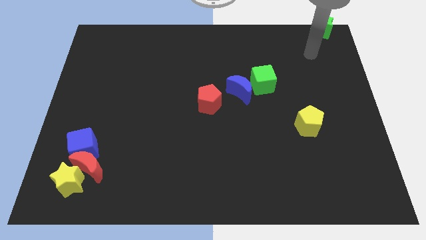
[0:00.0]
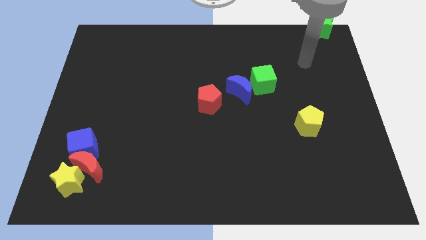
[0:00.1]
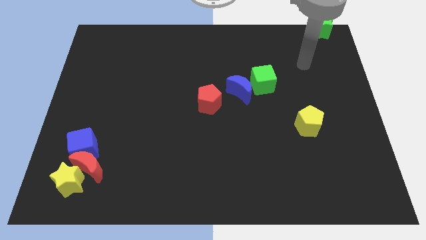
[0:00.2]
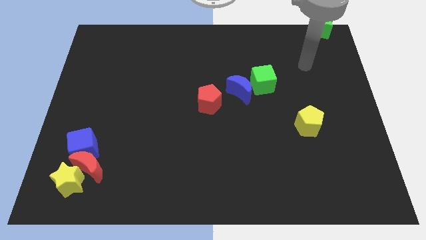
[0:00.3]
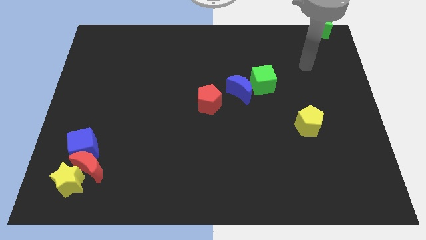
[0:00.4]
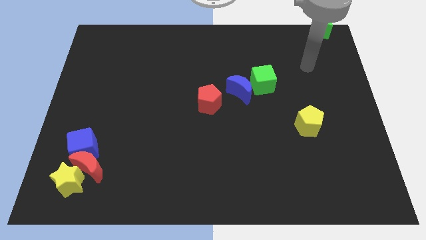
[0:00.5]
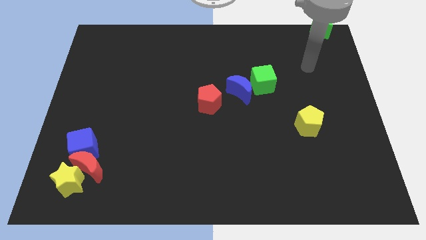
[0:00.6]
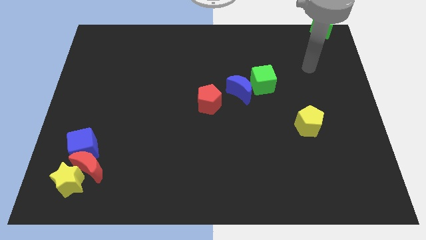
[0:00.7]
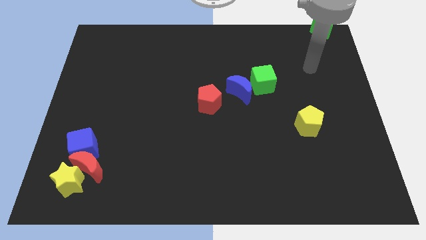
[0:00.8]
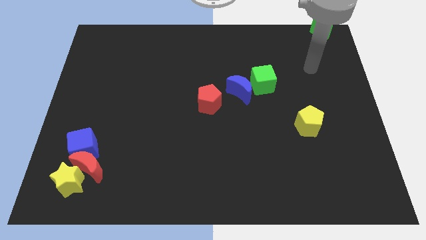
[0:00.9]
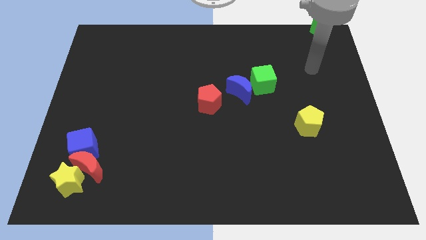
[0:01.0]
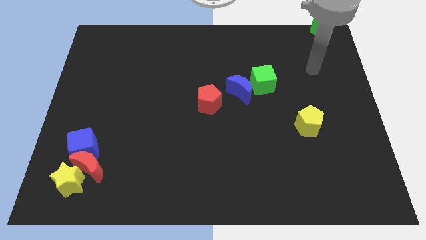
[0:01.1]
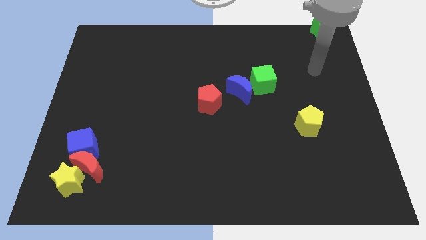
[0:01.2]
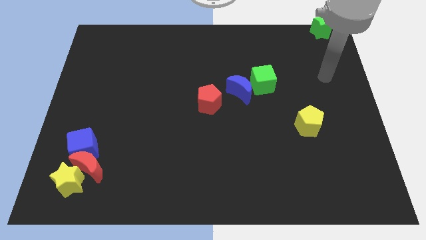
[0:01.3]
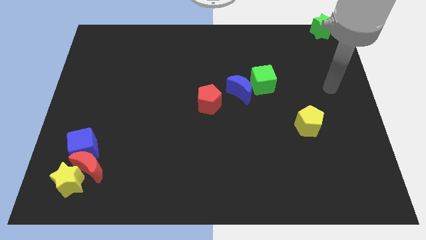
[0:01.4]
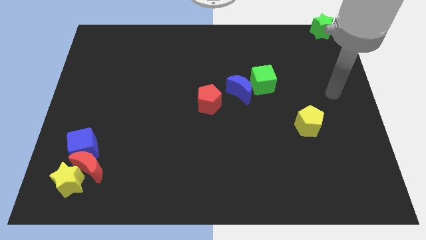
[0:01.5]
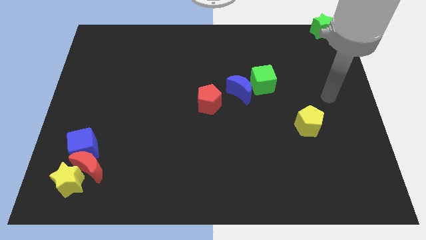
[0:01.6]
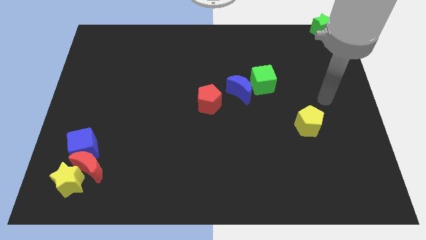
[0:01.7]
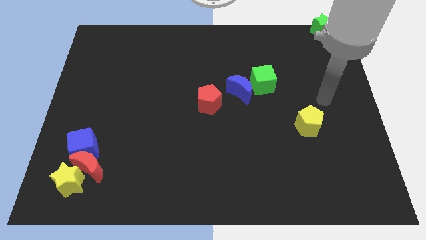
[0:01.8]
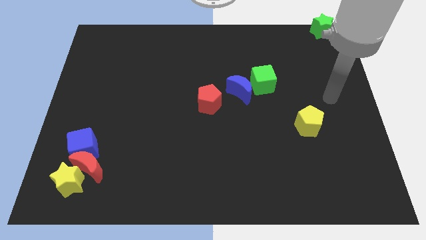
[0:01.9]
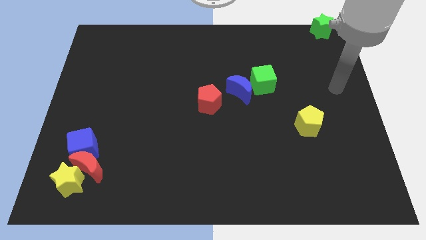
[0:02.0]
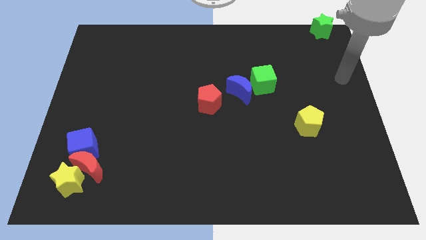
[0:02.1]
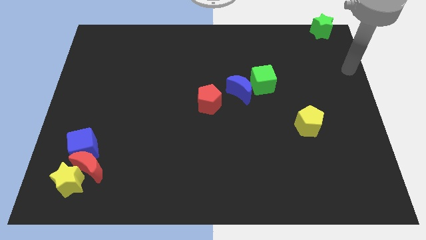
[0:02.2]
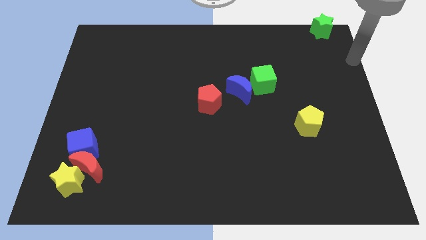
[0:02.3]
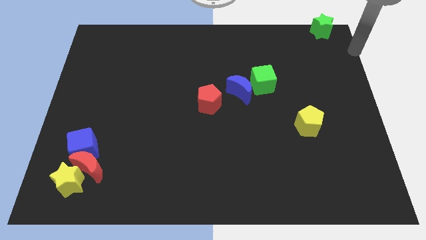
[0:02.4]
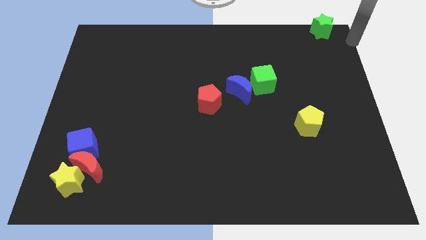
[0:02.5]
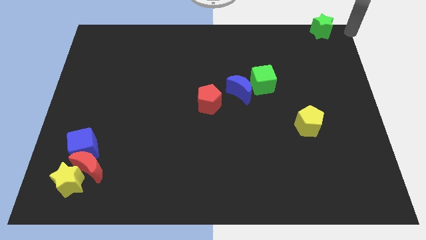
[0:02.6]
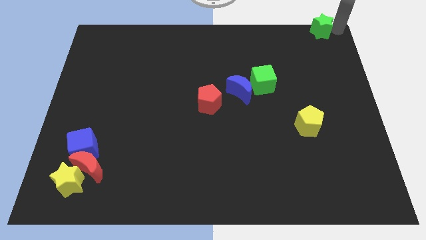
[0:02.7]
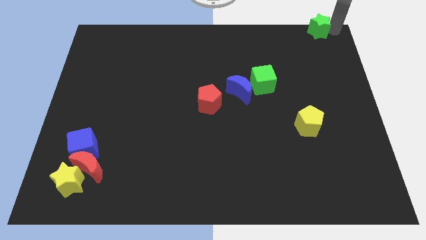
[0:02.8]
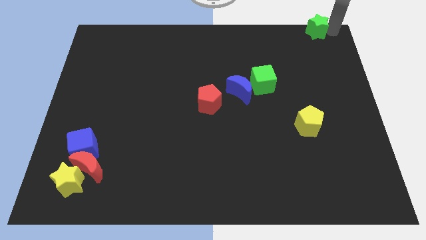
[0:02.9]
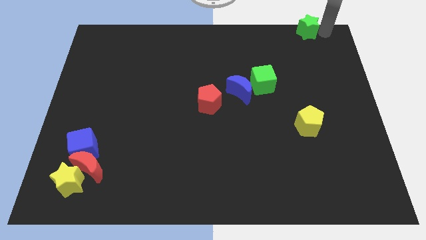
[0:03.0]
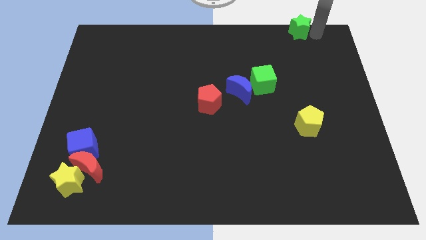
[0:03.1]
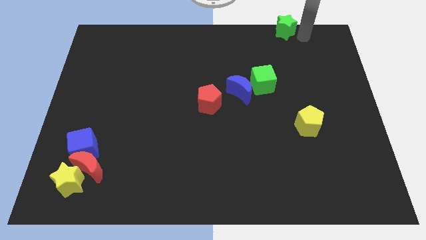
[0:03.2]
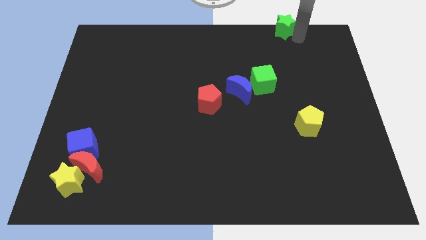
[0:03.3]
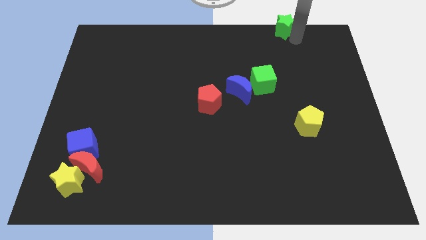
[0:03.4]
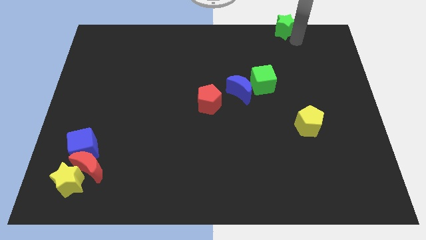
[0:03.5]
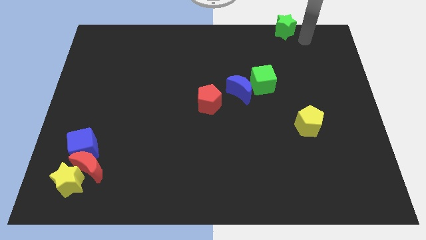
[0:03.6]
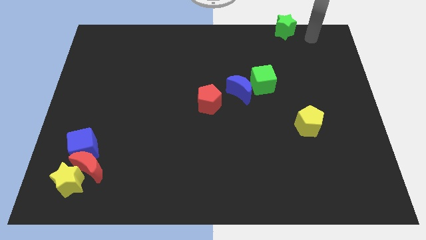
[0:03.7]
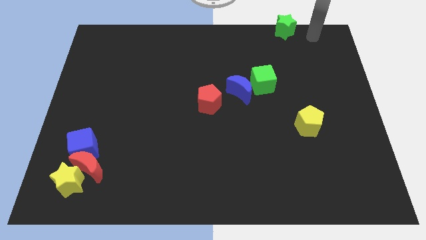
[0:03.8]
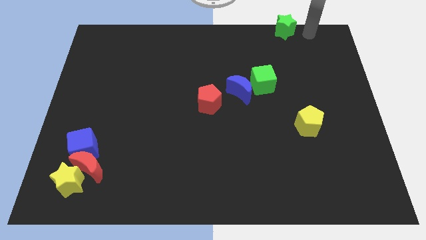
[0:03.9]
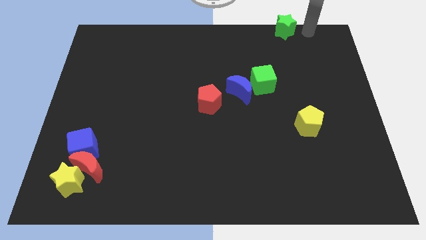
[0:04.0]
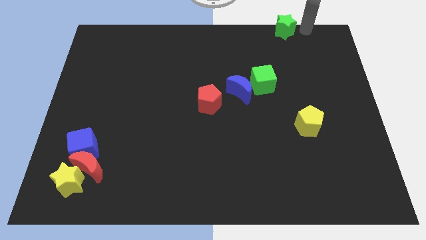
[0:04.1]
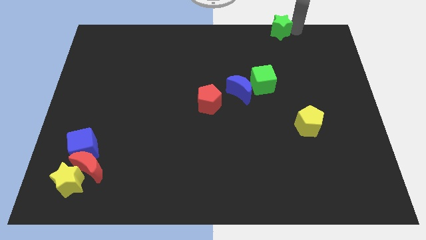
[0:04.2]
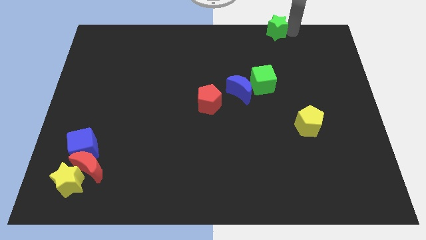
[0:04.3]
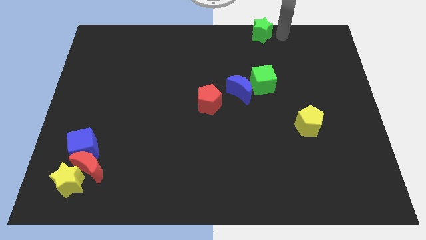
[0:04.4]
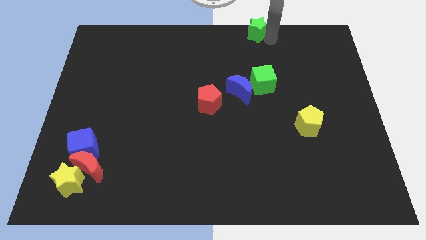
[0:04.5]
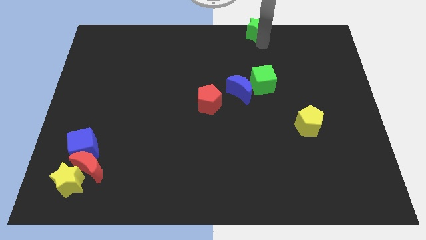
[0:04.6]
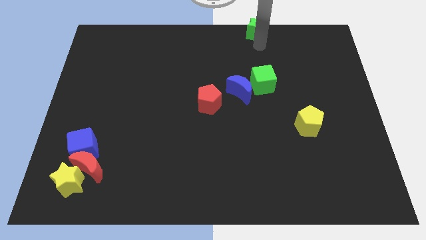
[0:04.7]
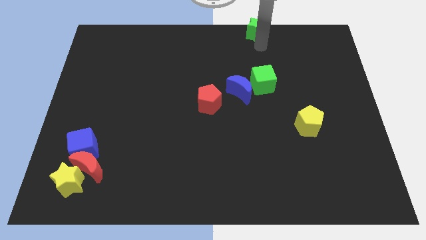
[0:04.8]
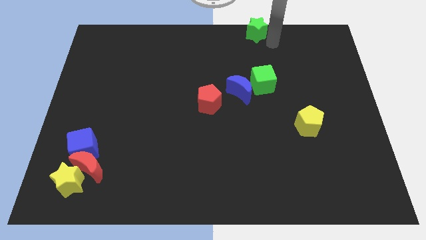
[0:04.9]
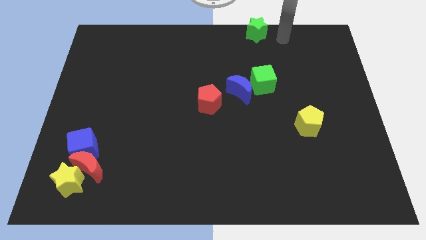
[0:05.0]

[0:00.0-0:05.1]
place the green star above the green cube

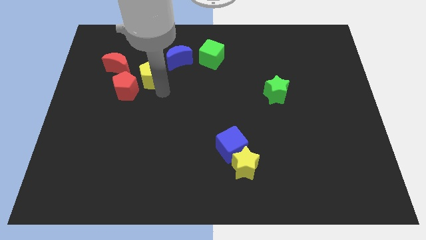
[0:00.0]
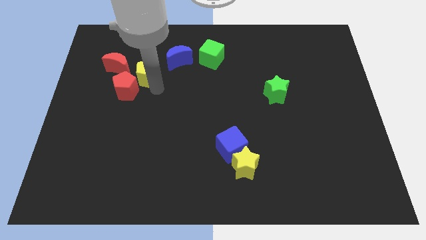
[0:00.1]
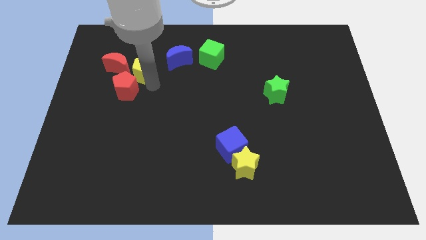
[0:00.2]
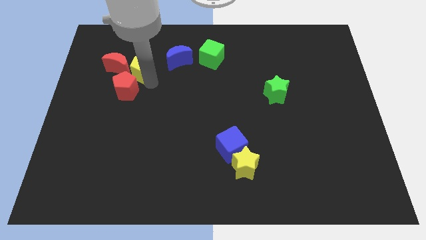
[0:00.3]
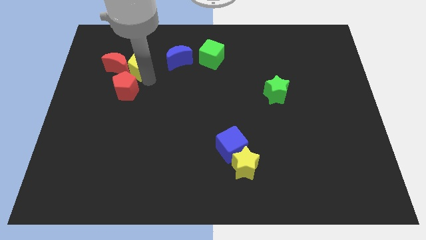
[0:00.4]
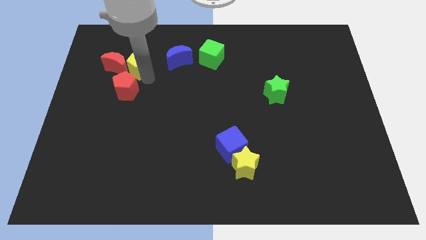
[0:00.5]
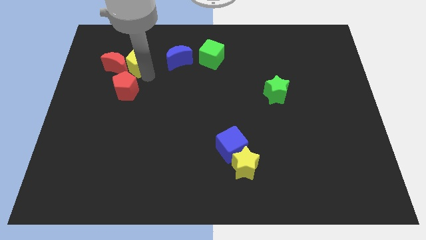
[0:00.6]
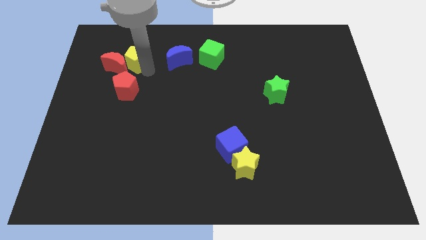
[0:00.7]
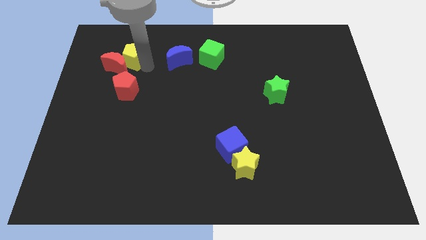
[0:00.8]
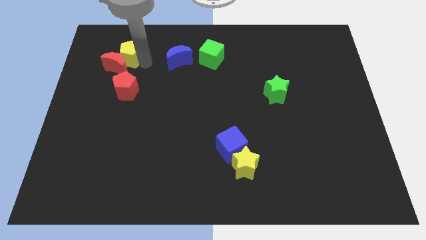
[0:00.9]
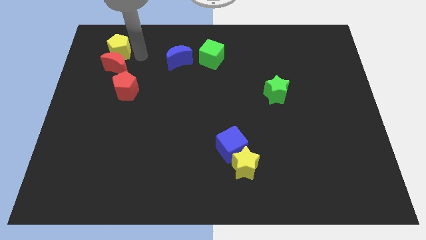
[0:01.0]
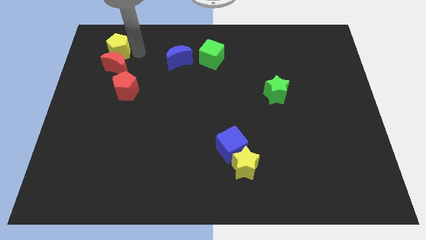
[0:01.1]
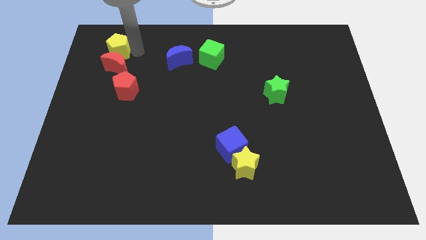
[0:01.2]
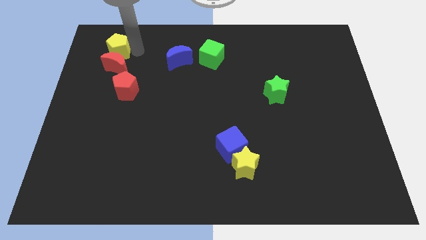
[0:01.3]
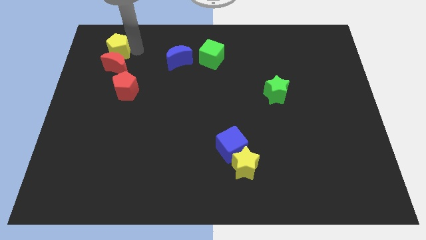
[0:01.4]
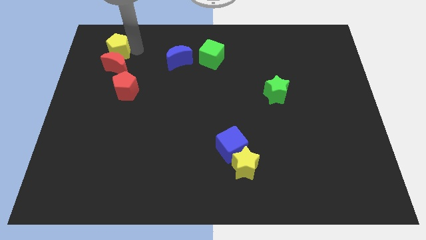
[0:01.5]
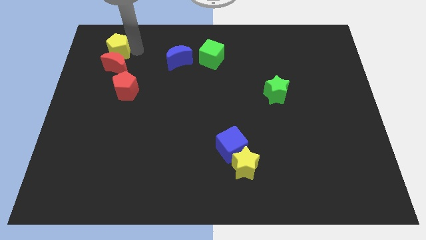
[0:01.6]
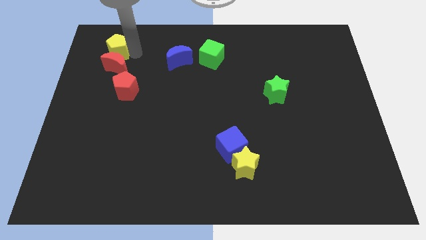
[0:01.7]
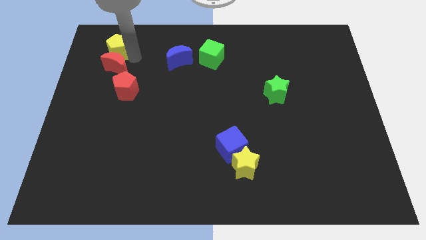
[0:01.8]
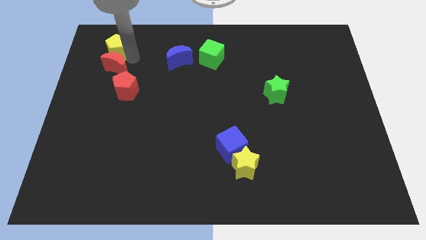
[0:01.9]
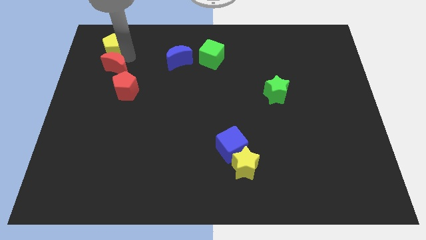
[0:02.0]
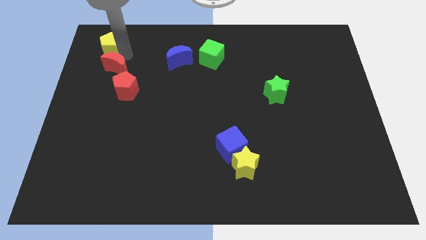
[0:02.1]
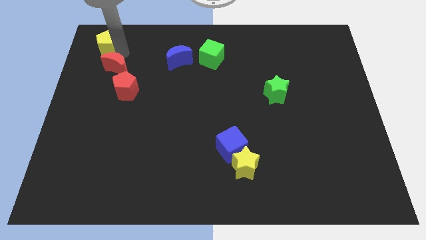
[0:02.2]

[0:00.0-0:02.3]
place yellow pentagon above red moon

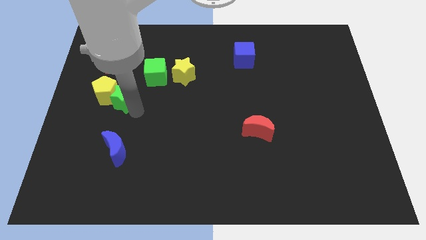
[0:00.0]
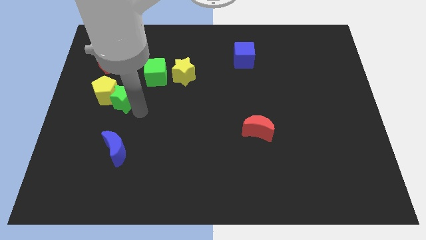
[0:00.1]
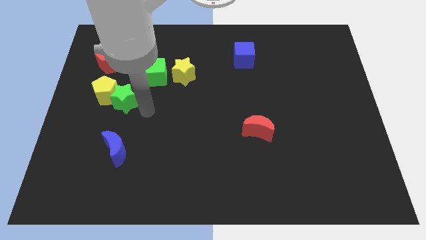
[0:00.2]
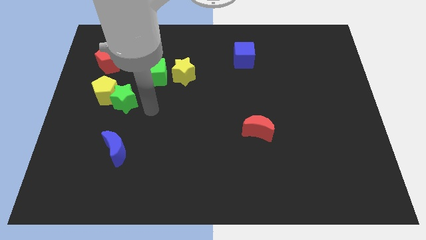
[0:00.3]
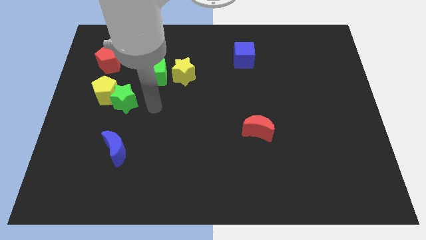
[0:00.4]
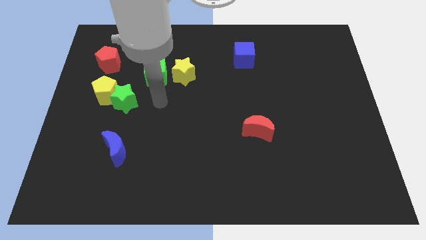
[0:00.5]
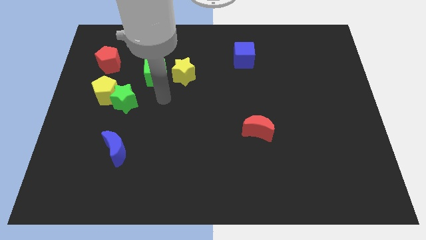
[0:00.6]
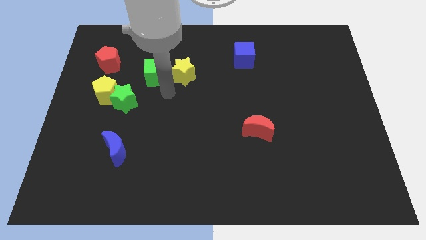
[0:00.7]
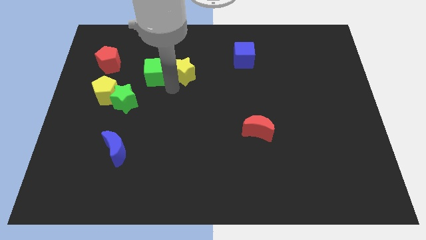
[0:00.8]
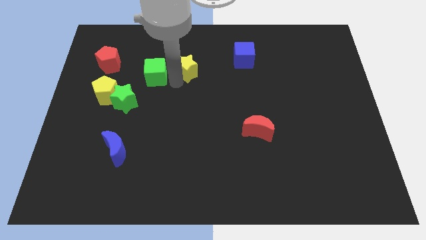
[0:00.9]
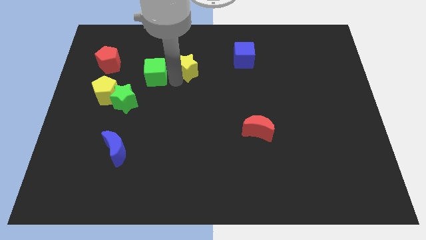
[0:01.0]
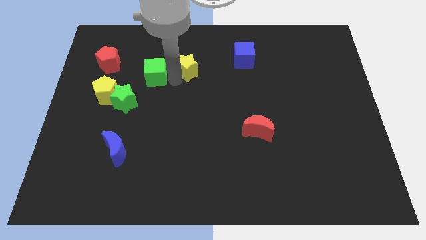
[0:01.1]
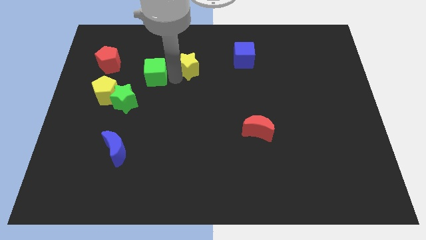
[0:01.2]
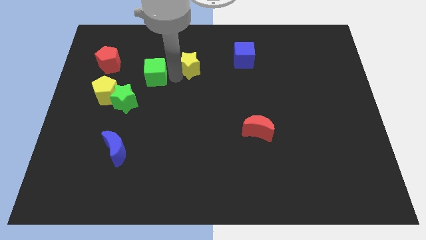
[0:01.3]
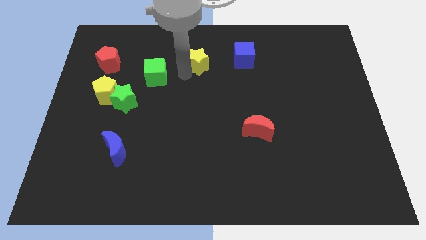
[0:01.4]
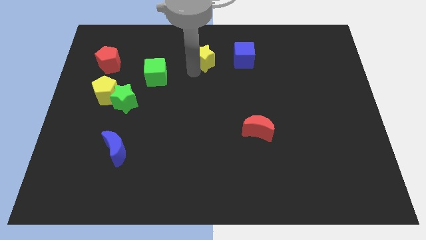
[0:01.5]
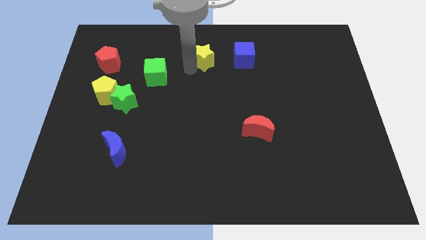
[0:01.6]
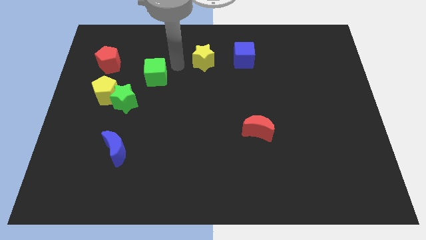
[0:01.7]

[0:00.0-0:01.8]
place your arm in between yellow star and green cube
